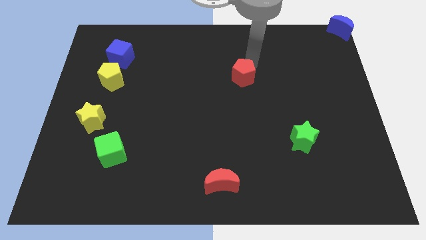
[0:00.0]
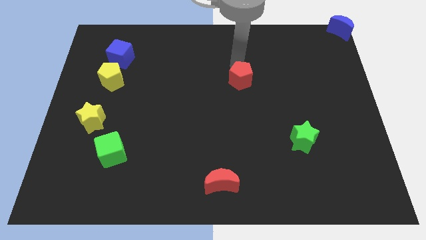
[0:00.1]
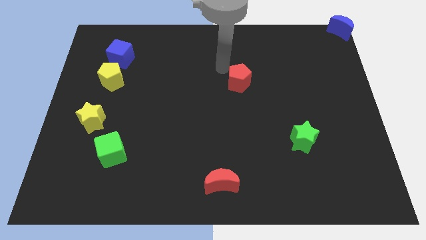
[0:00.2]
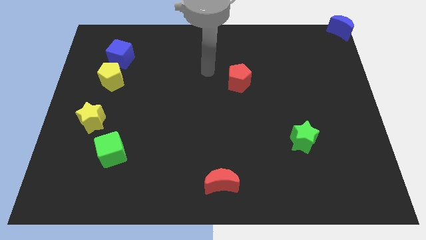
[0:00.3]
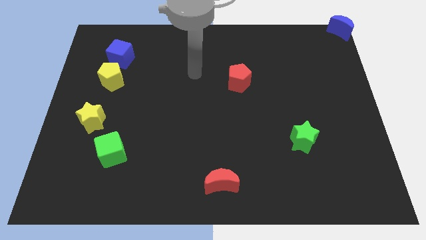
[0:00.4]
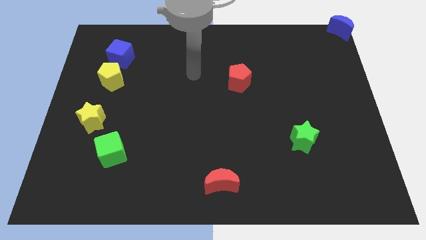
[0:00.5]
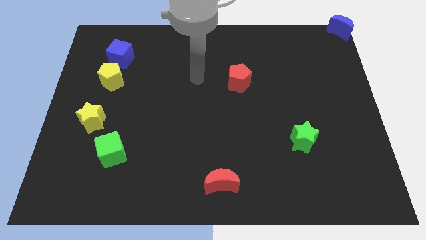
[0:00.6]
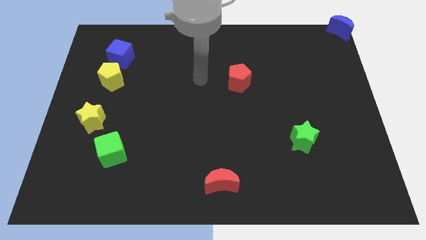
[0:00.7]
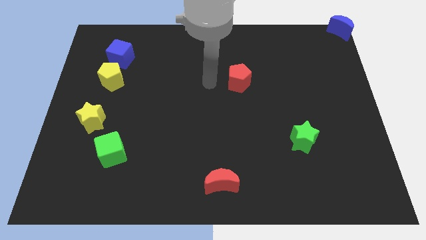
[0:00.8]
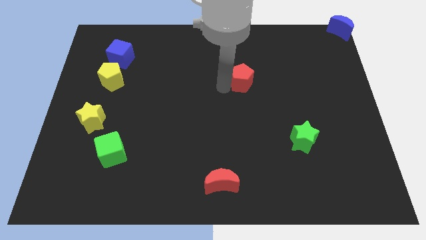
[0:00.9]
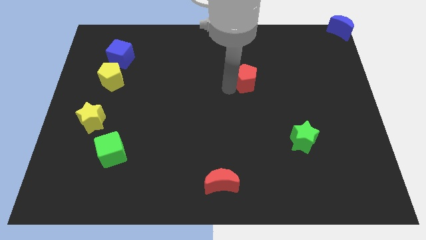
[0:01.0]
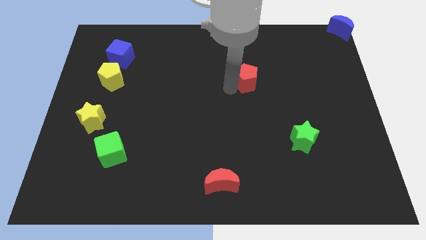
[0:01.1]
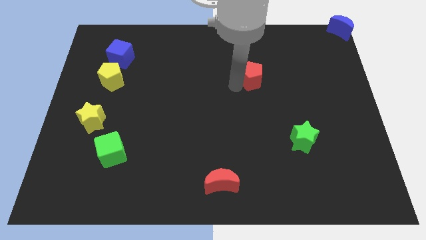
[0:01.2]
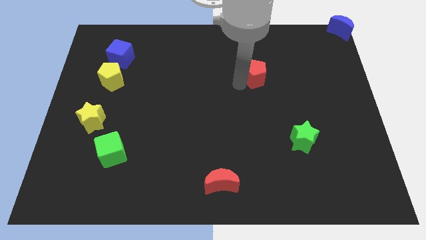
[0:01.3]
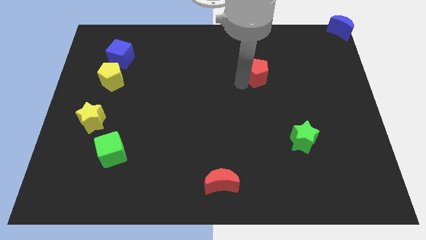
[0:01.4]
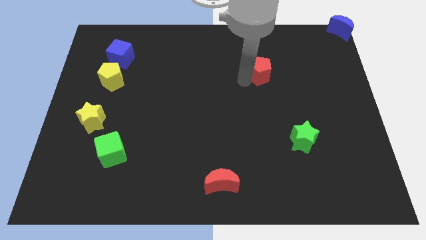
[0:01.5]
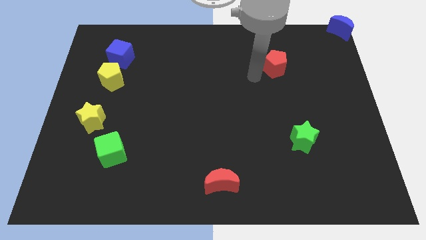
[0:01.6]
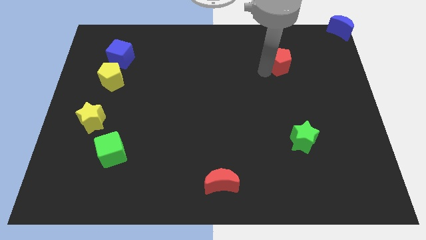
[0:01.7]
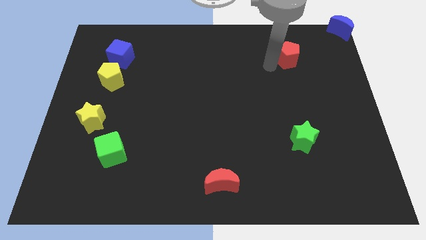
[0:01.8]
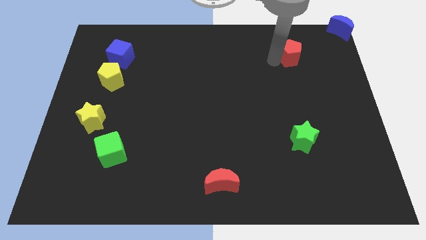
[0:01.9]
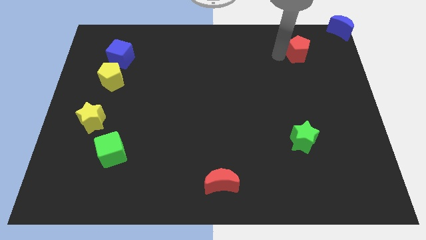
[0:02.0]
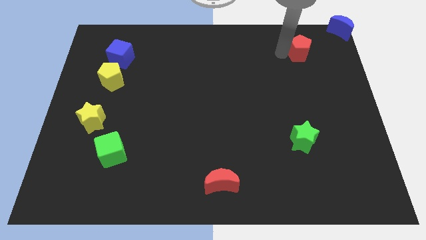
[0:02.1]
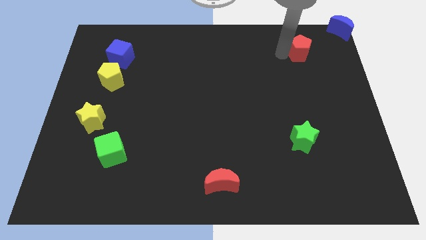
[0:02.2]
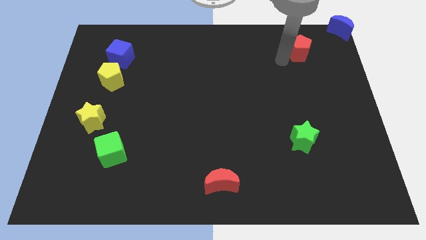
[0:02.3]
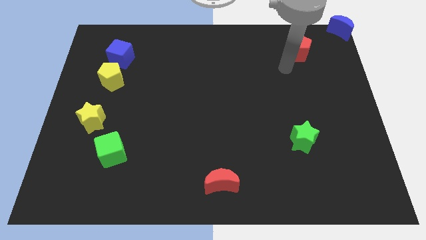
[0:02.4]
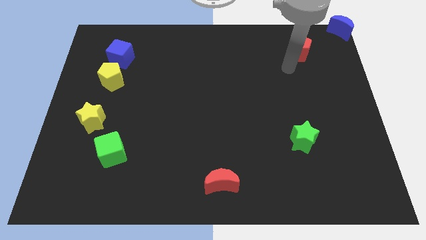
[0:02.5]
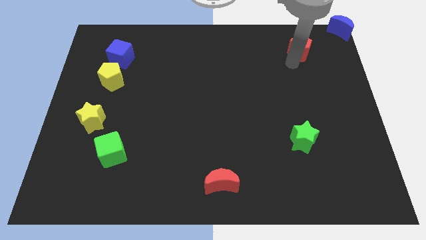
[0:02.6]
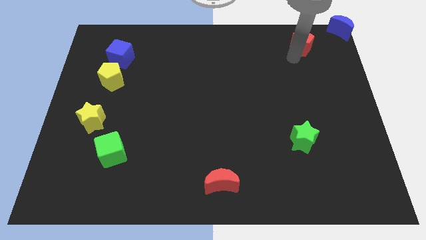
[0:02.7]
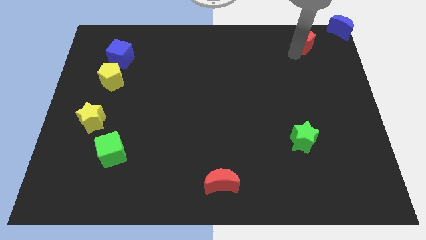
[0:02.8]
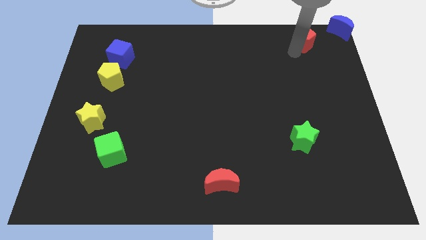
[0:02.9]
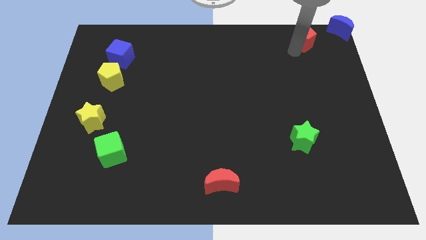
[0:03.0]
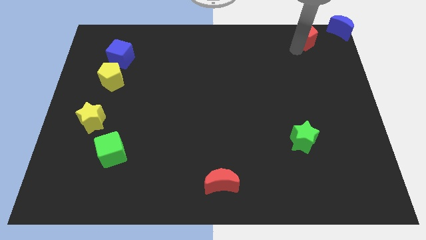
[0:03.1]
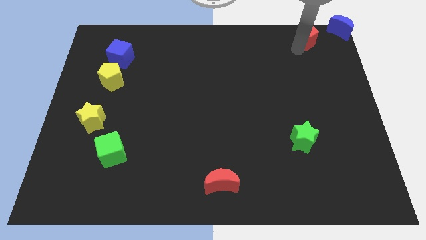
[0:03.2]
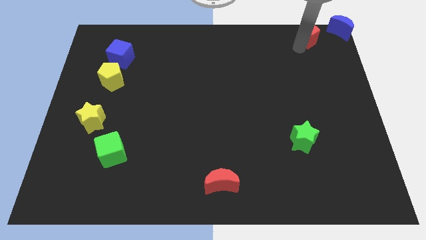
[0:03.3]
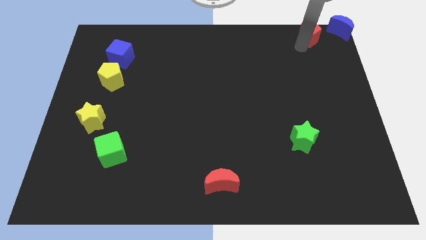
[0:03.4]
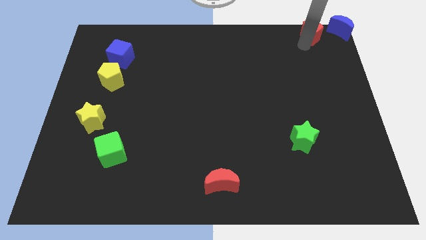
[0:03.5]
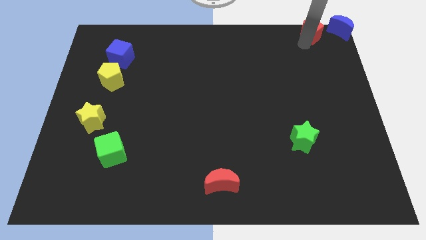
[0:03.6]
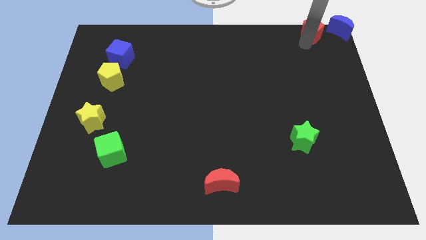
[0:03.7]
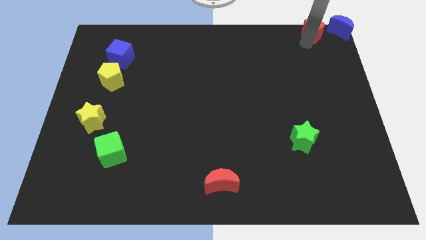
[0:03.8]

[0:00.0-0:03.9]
place the red pentagon left to the blue moon

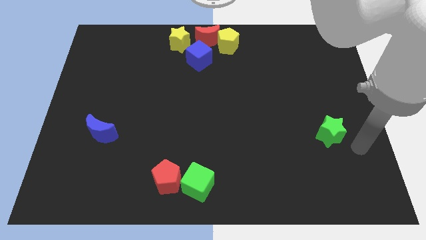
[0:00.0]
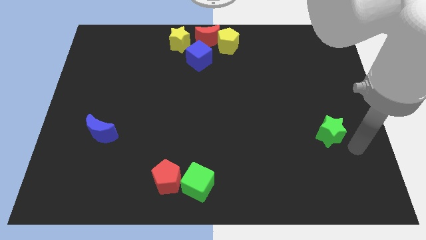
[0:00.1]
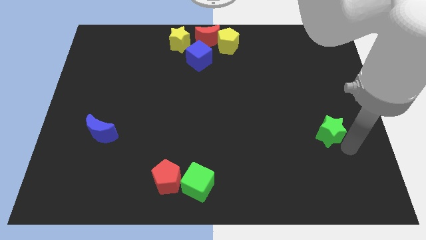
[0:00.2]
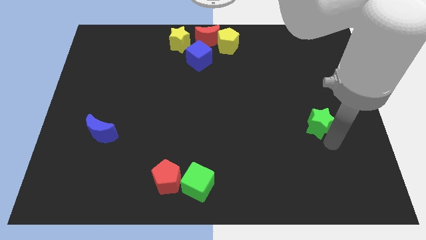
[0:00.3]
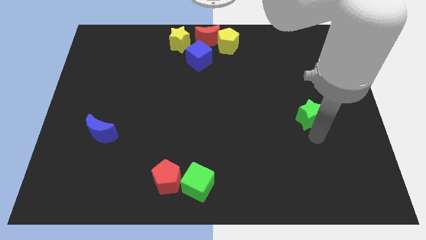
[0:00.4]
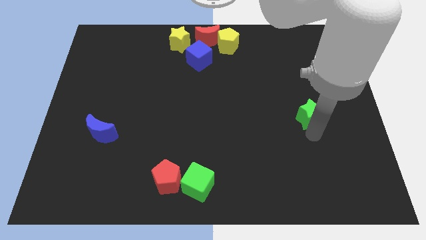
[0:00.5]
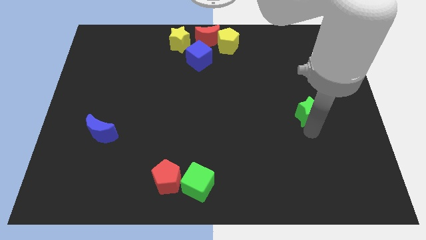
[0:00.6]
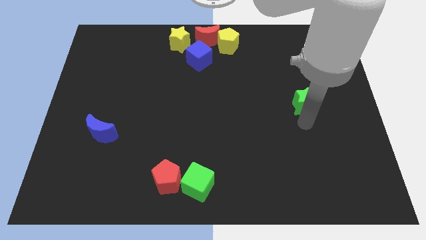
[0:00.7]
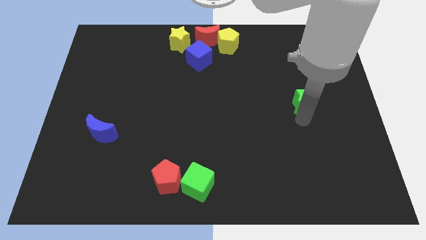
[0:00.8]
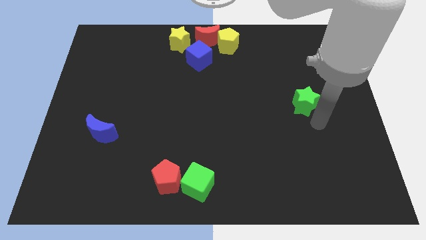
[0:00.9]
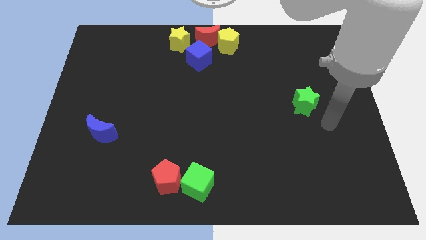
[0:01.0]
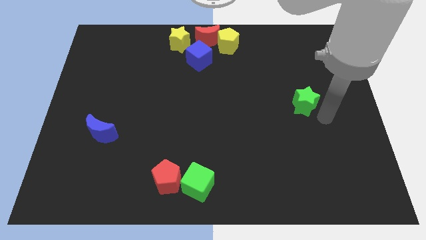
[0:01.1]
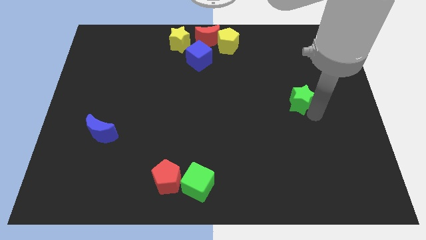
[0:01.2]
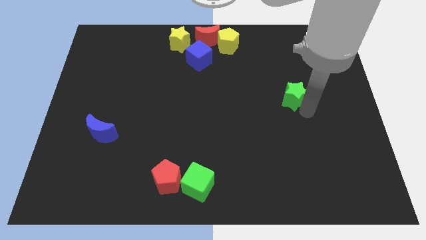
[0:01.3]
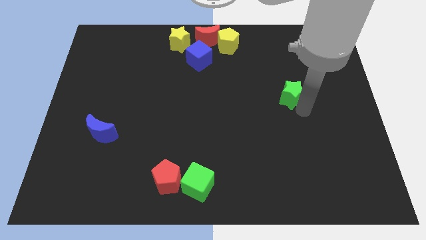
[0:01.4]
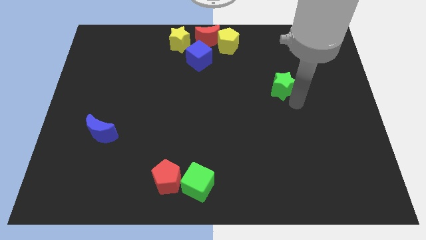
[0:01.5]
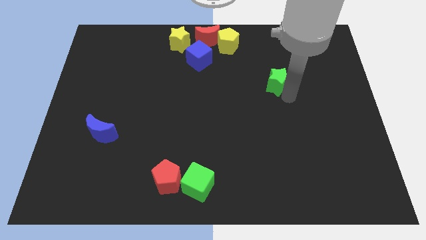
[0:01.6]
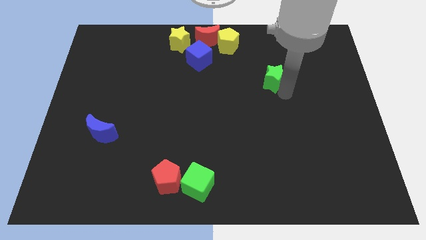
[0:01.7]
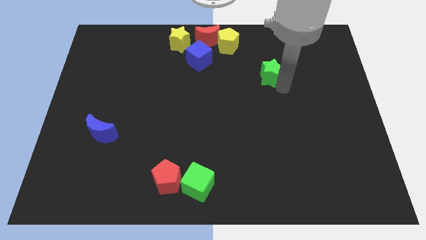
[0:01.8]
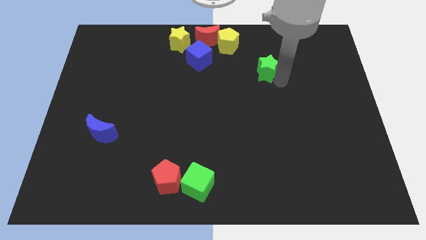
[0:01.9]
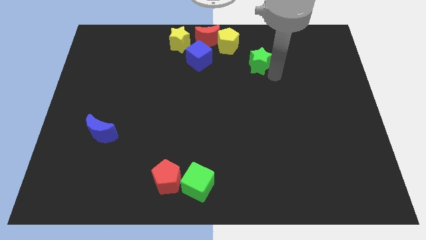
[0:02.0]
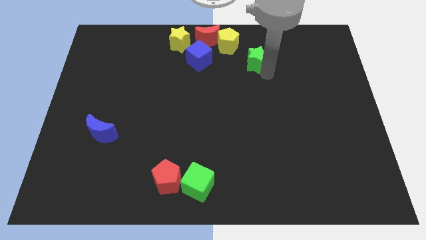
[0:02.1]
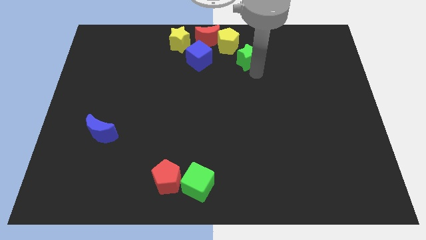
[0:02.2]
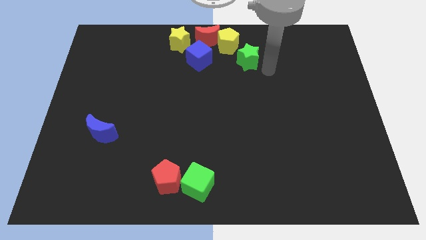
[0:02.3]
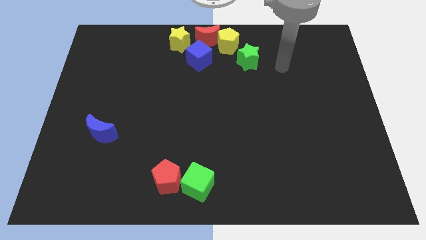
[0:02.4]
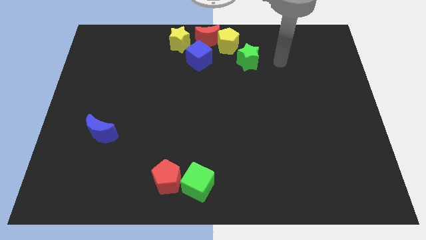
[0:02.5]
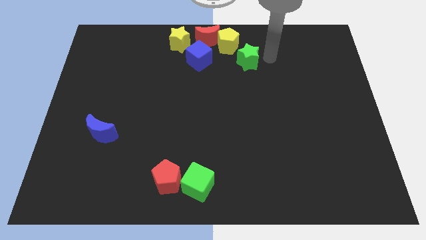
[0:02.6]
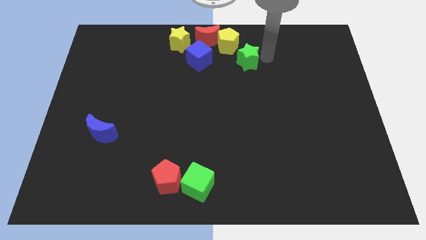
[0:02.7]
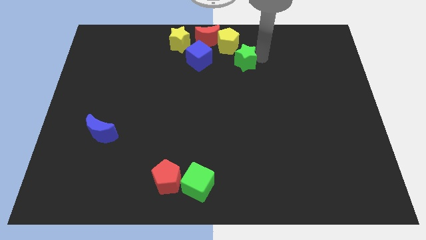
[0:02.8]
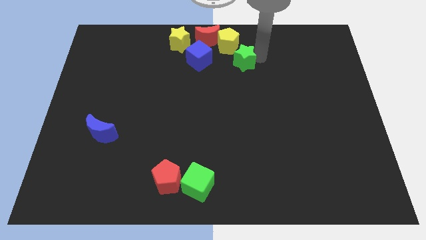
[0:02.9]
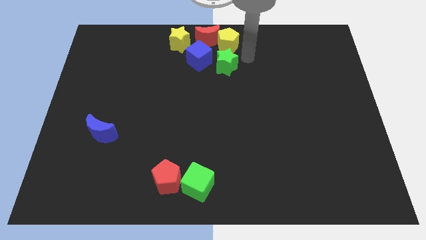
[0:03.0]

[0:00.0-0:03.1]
move green star towards yellow pentagon

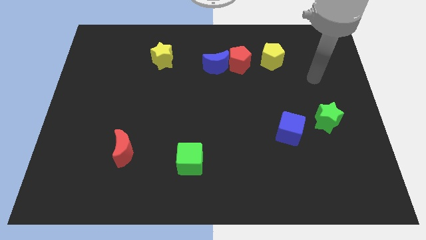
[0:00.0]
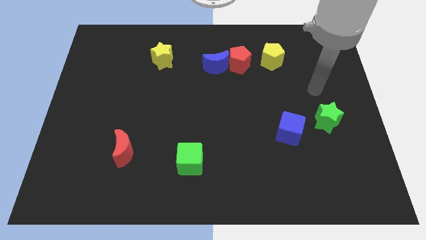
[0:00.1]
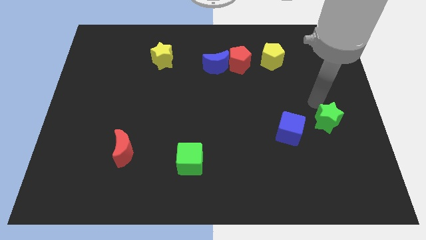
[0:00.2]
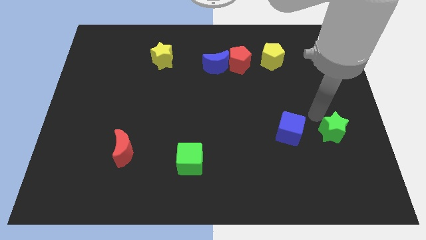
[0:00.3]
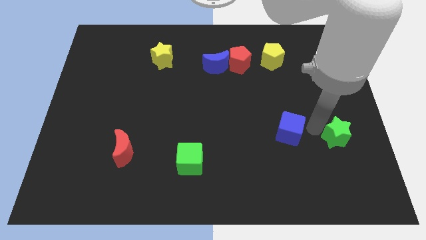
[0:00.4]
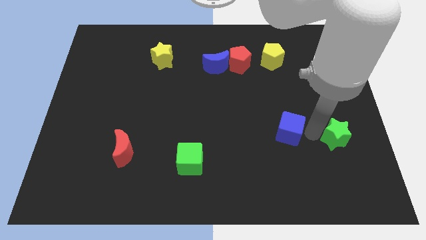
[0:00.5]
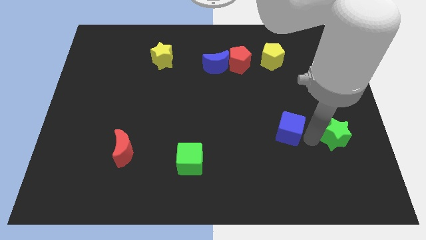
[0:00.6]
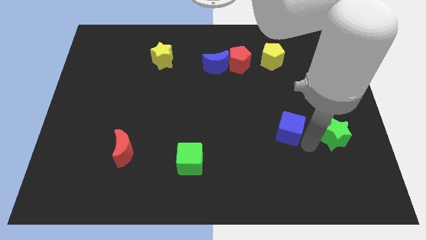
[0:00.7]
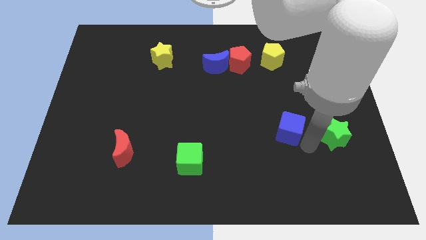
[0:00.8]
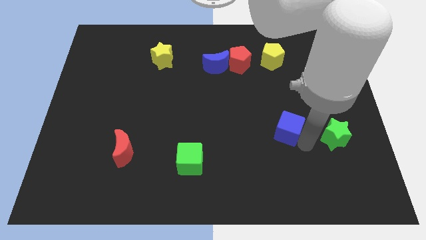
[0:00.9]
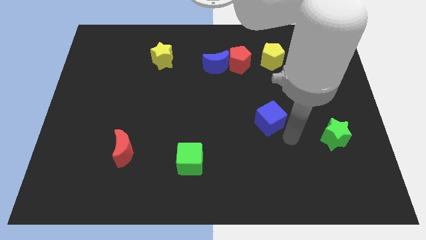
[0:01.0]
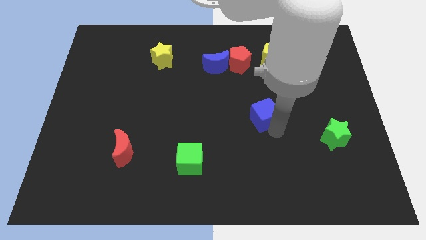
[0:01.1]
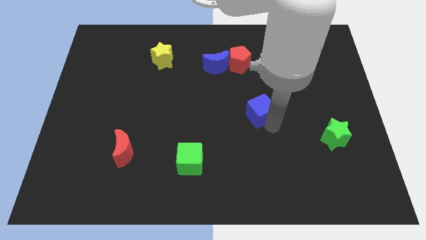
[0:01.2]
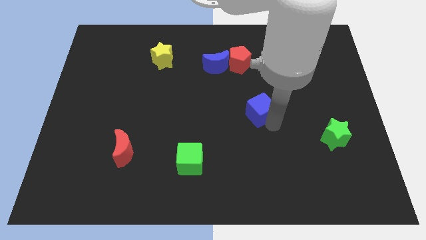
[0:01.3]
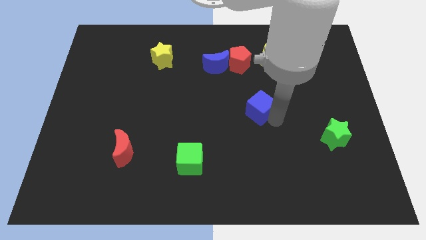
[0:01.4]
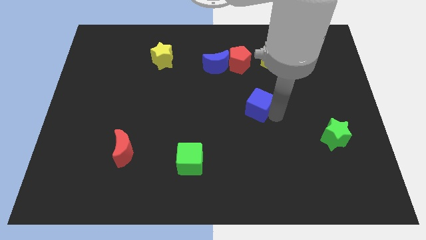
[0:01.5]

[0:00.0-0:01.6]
move the blue cube up slightly

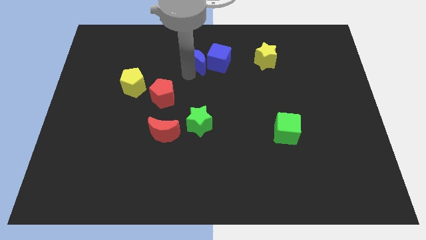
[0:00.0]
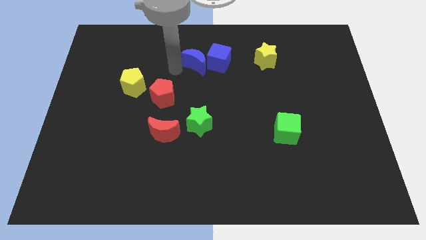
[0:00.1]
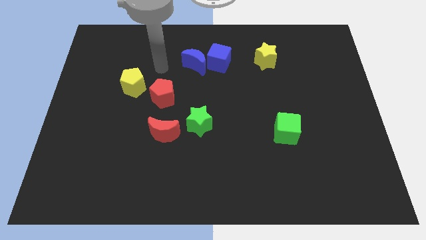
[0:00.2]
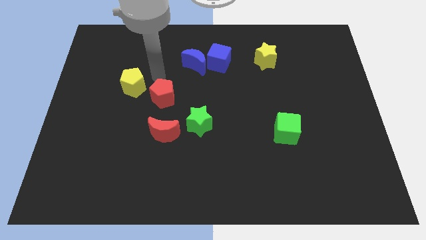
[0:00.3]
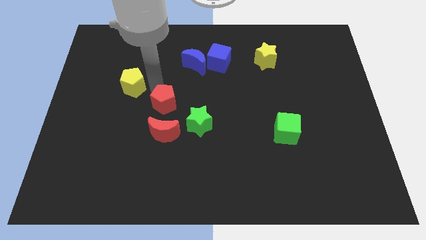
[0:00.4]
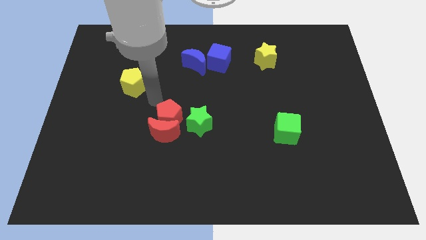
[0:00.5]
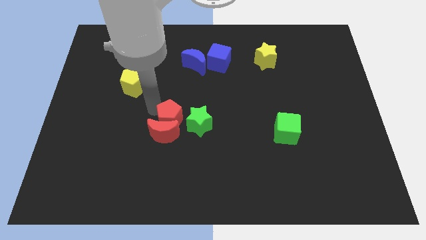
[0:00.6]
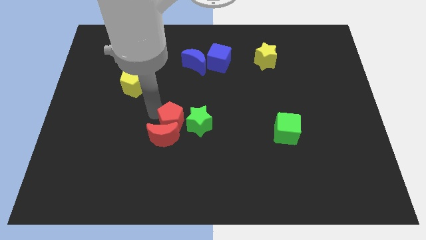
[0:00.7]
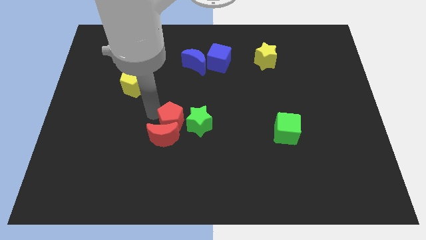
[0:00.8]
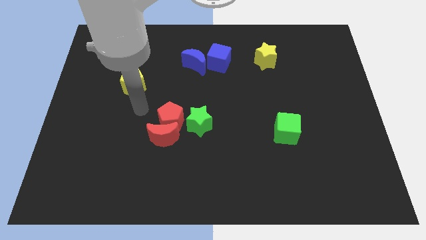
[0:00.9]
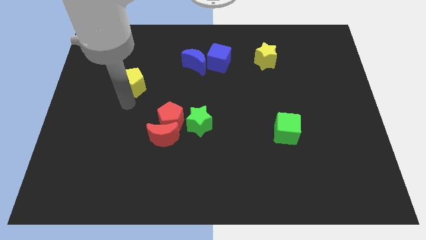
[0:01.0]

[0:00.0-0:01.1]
go to the bottom side of the yellow pentagon
